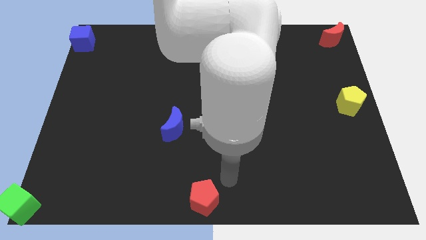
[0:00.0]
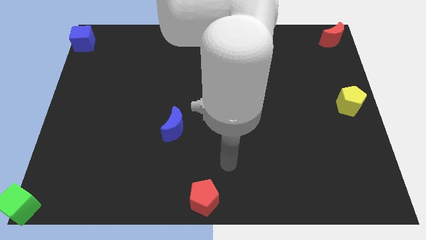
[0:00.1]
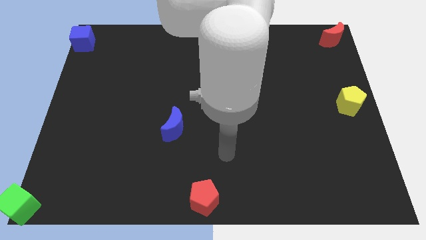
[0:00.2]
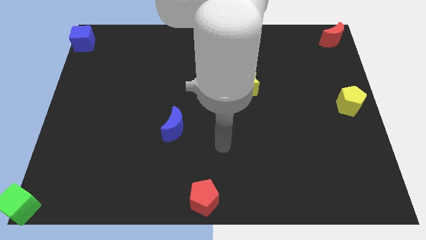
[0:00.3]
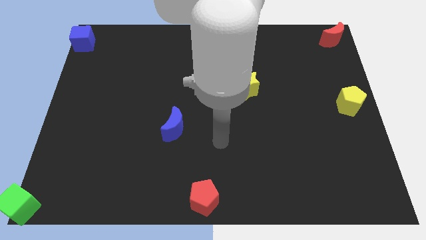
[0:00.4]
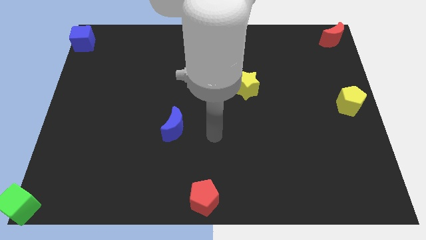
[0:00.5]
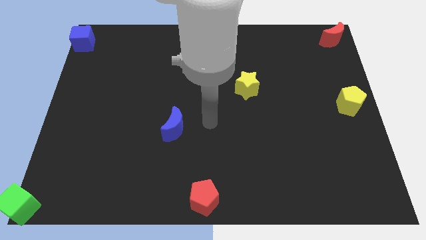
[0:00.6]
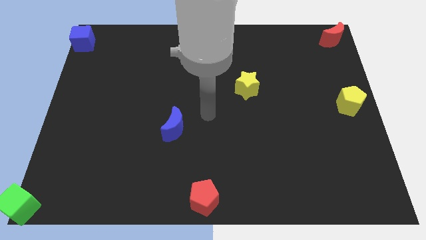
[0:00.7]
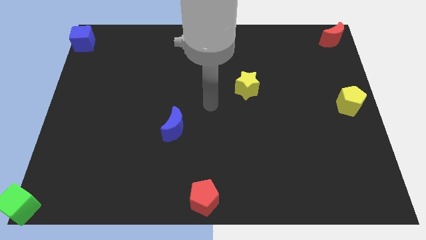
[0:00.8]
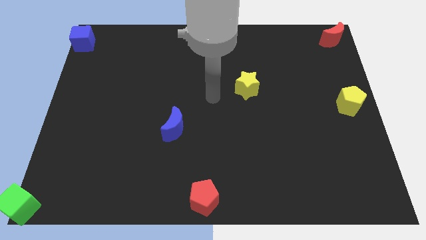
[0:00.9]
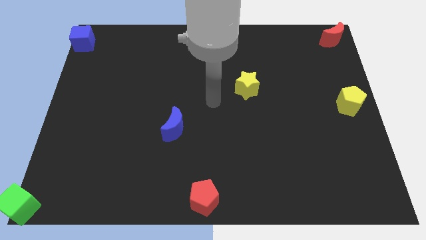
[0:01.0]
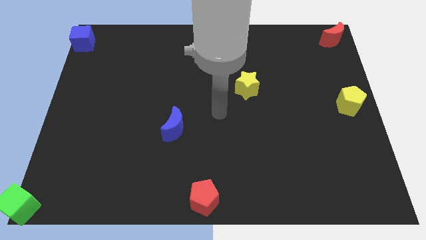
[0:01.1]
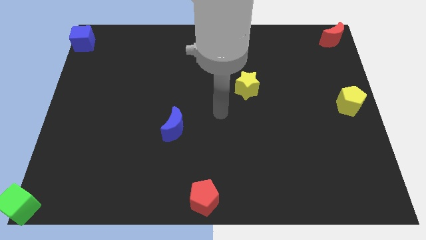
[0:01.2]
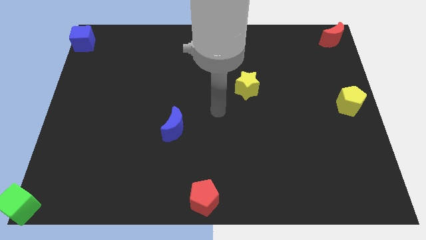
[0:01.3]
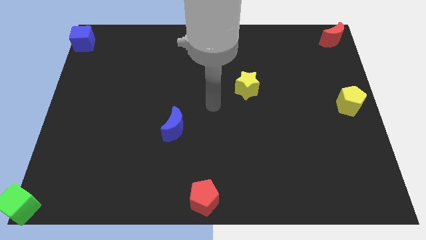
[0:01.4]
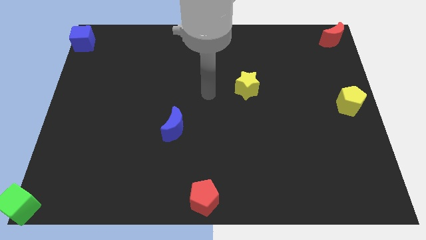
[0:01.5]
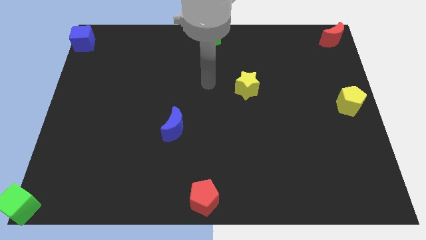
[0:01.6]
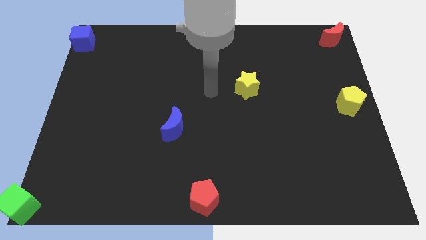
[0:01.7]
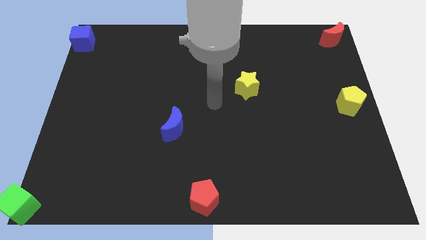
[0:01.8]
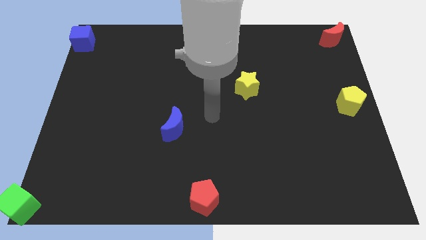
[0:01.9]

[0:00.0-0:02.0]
go and point your hand at the center of the board

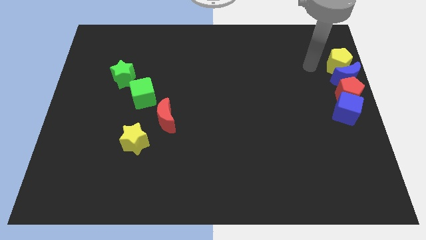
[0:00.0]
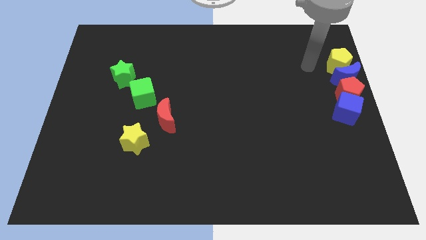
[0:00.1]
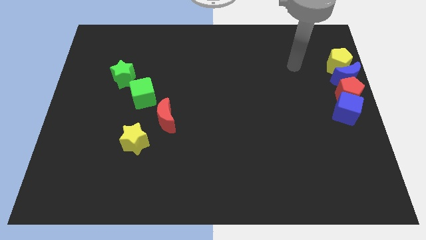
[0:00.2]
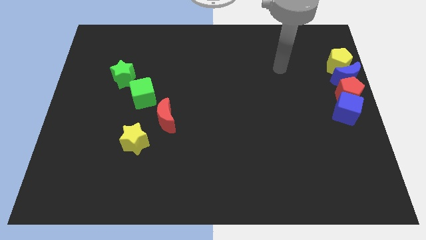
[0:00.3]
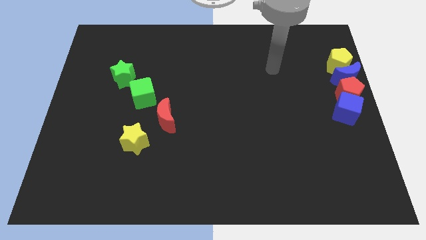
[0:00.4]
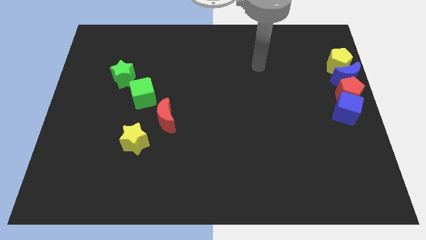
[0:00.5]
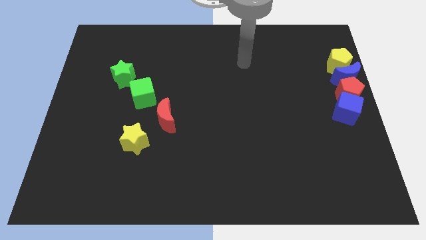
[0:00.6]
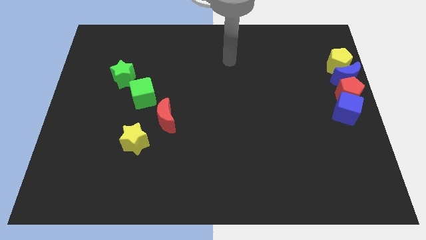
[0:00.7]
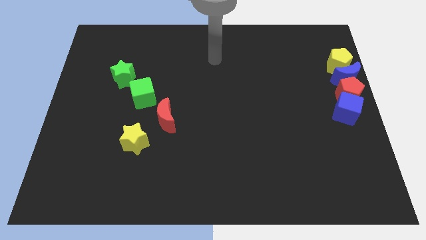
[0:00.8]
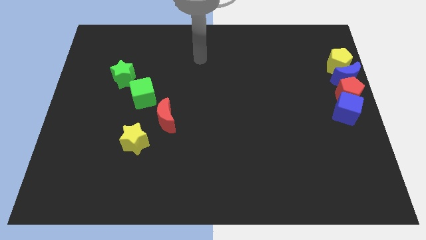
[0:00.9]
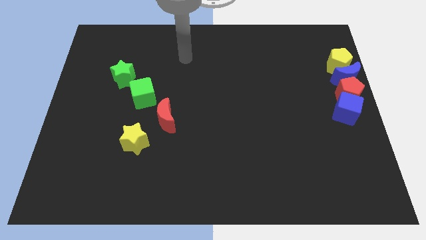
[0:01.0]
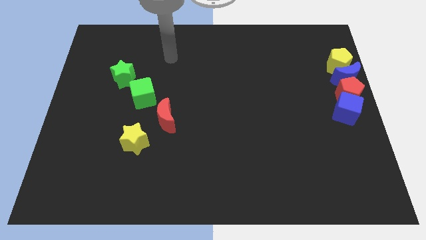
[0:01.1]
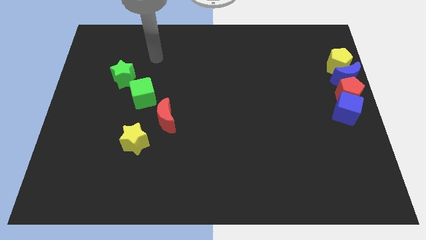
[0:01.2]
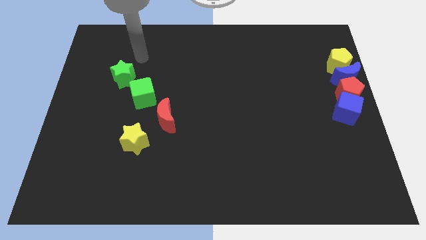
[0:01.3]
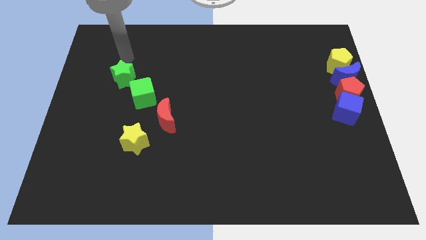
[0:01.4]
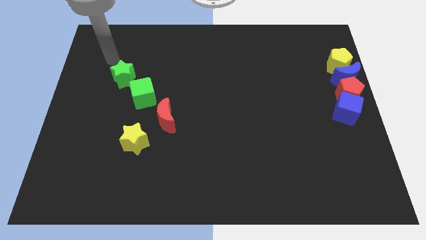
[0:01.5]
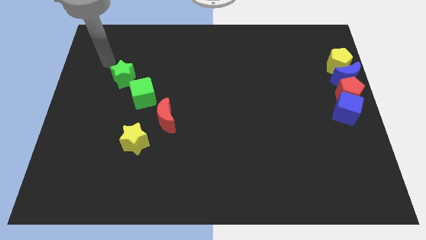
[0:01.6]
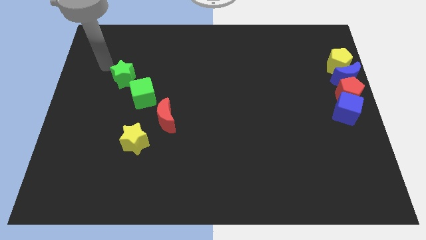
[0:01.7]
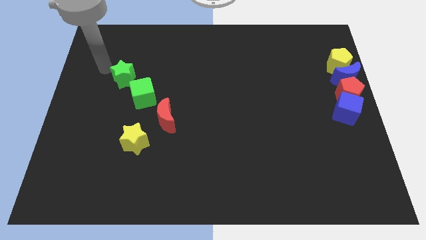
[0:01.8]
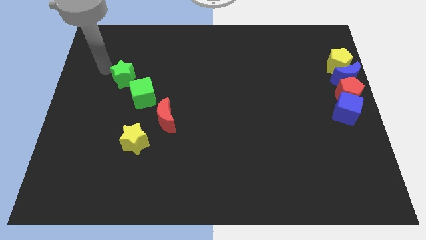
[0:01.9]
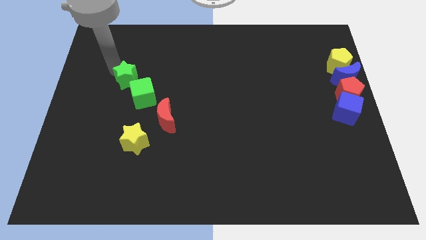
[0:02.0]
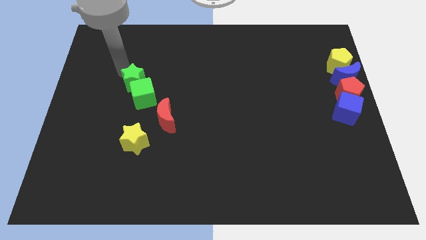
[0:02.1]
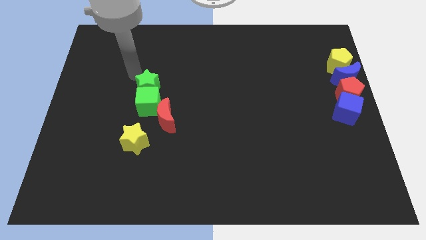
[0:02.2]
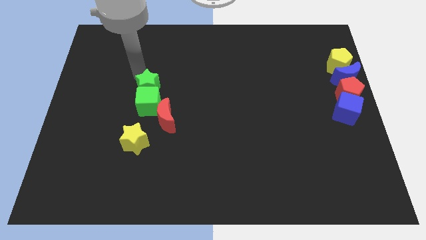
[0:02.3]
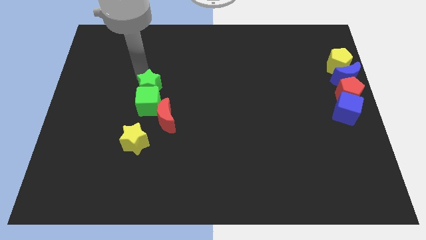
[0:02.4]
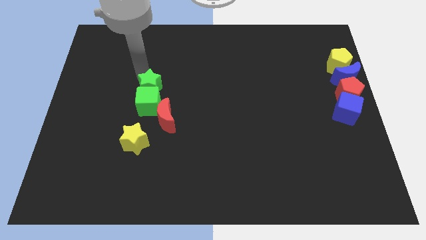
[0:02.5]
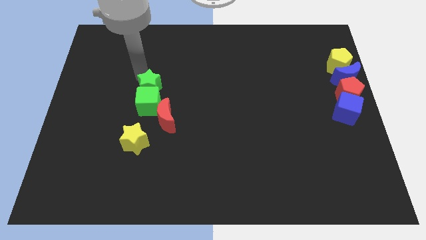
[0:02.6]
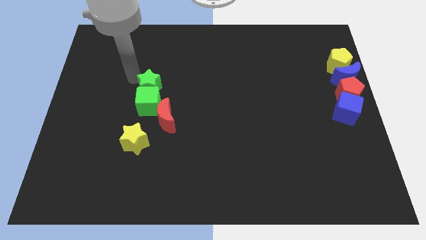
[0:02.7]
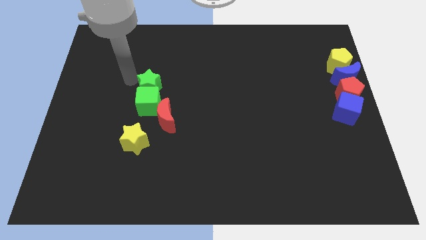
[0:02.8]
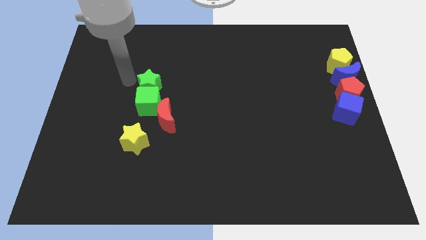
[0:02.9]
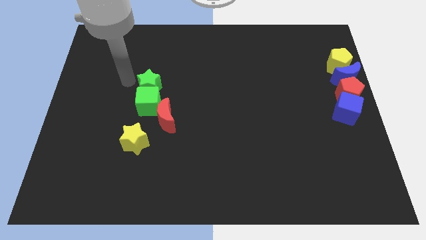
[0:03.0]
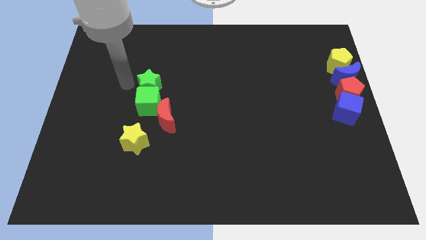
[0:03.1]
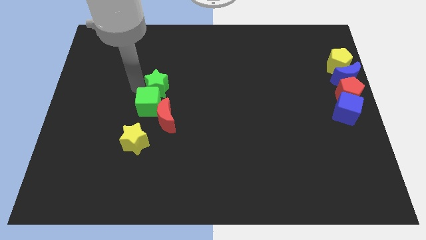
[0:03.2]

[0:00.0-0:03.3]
push the green star into green cube

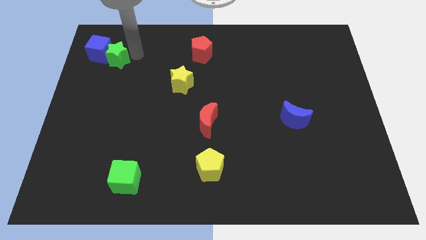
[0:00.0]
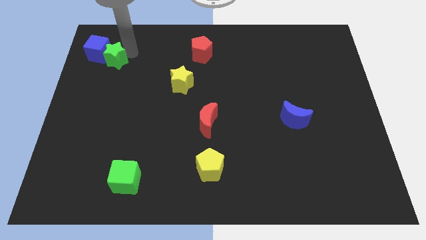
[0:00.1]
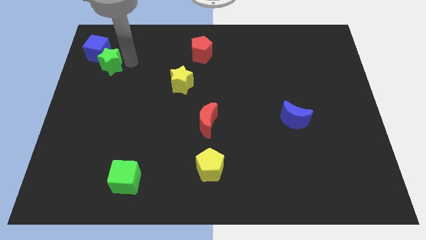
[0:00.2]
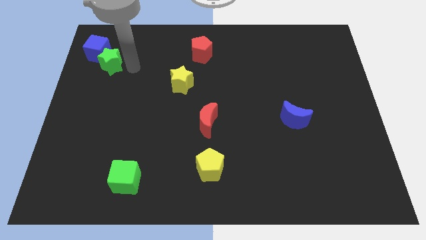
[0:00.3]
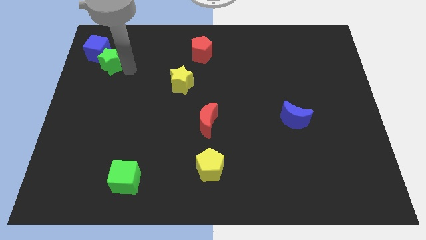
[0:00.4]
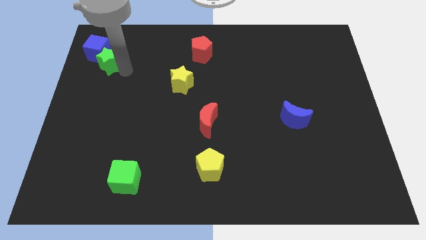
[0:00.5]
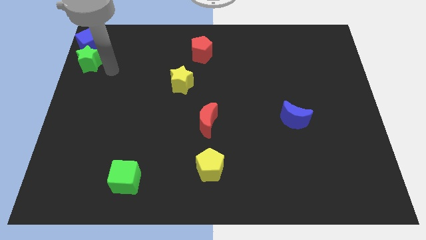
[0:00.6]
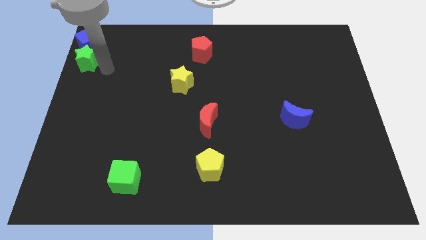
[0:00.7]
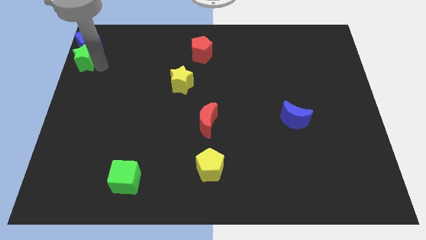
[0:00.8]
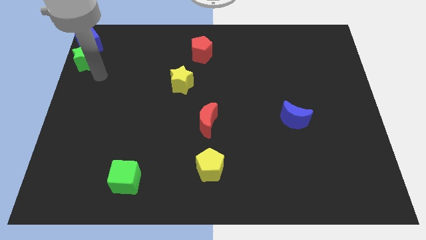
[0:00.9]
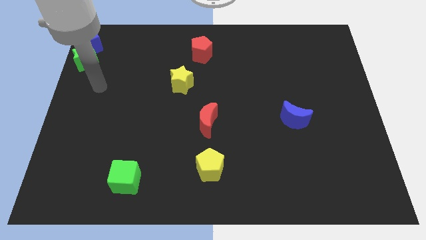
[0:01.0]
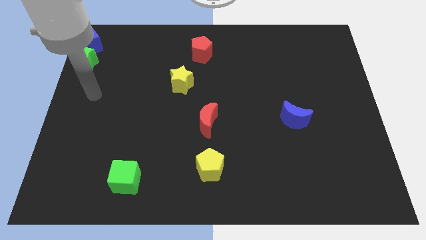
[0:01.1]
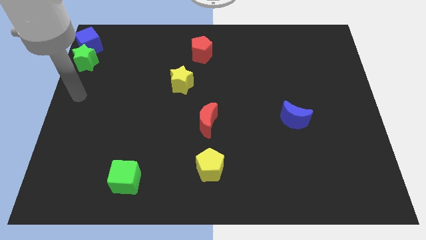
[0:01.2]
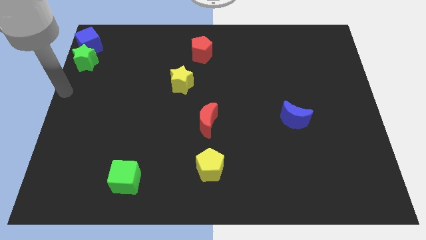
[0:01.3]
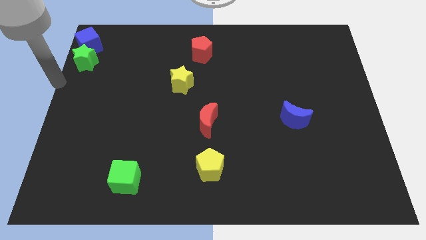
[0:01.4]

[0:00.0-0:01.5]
place green star below blue cube

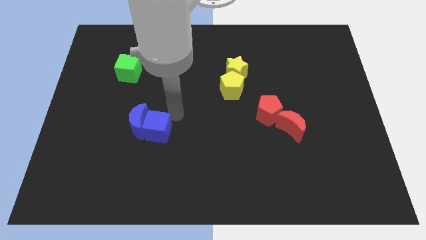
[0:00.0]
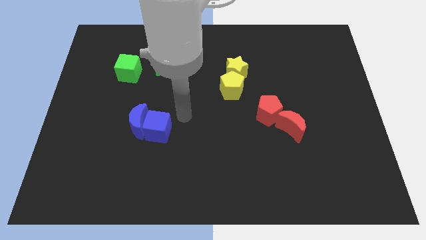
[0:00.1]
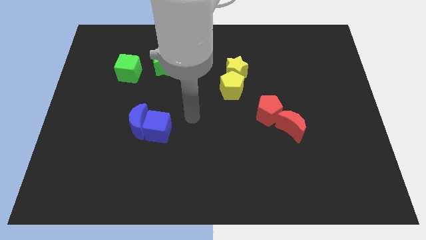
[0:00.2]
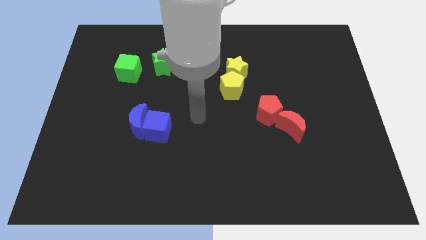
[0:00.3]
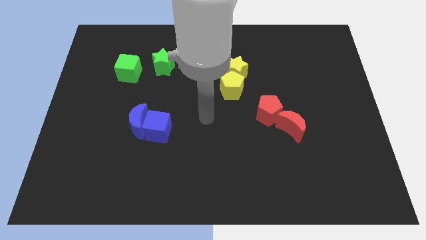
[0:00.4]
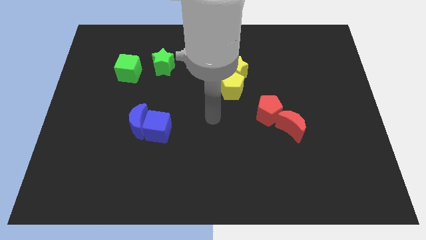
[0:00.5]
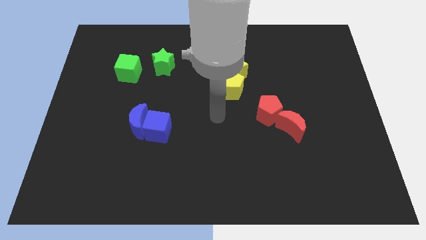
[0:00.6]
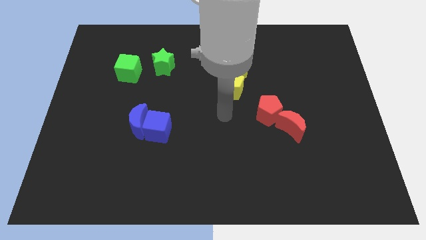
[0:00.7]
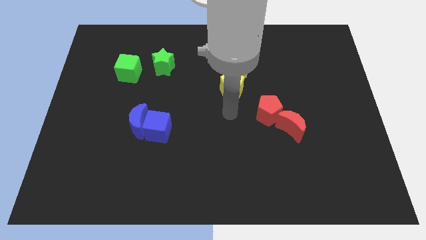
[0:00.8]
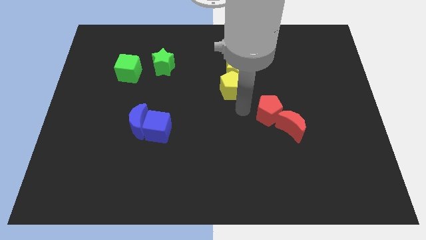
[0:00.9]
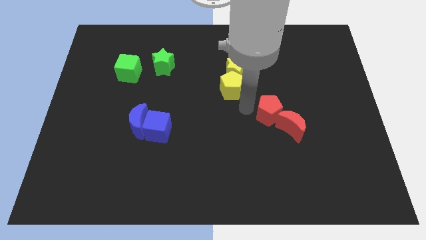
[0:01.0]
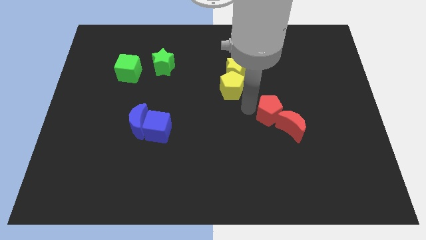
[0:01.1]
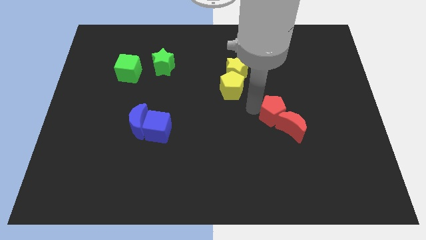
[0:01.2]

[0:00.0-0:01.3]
go away from the blue cube

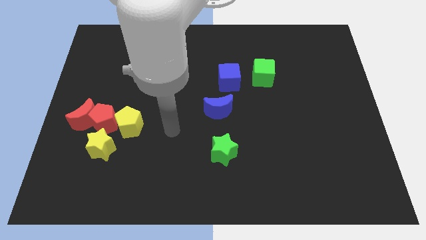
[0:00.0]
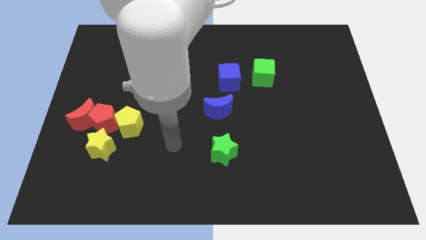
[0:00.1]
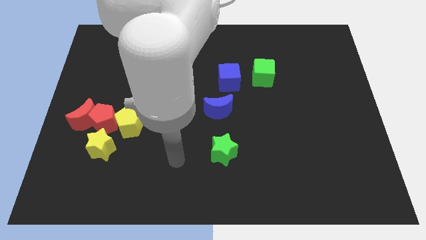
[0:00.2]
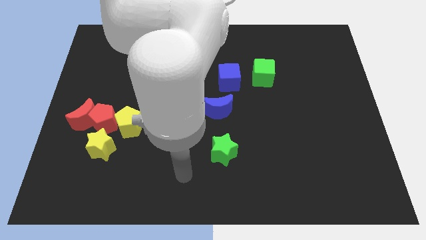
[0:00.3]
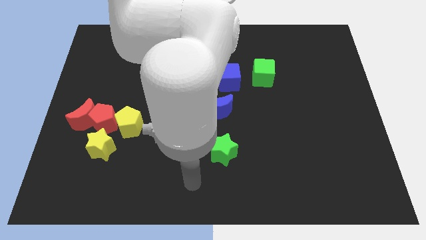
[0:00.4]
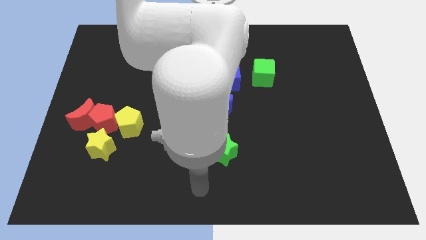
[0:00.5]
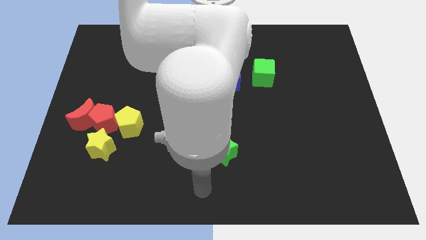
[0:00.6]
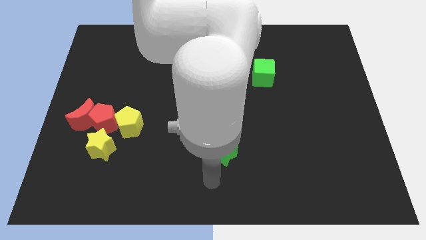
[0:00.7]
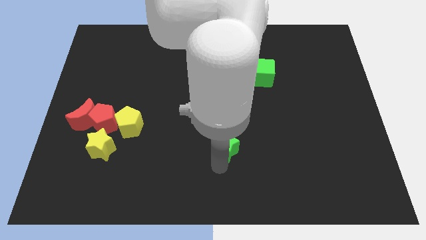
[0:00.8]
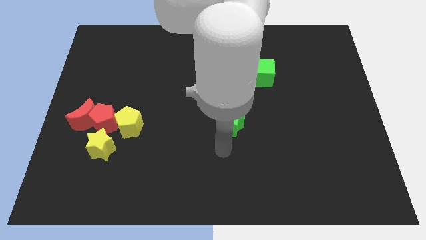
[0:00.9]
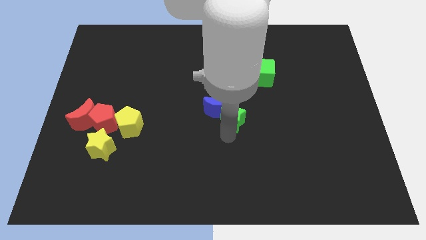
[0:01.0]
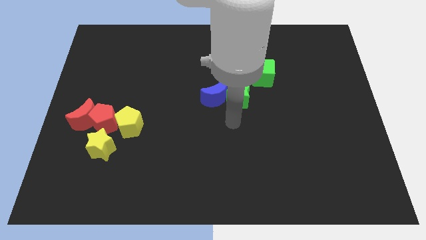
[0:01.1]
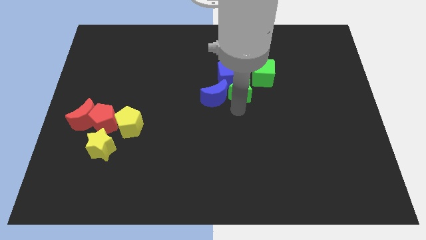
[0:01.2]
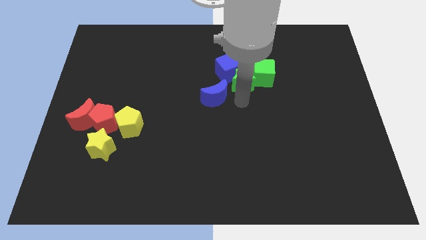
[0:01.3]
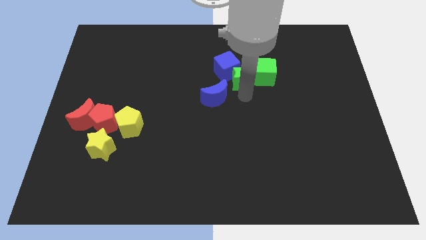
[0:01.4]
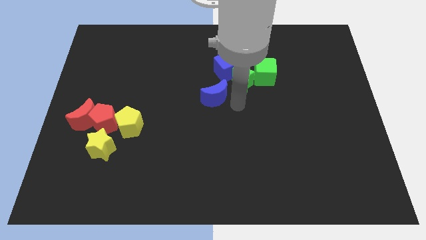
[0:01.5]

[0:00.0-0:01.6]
push the green star into the blue cube
